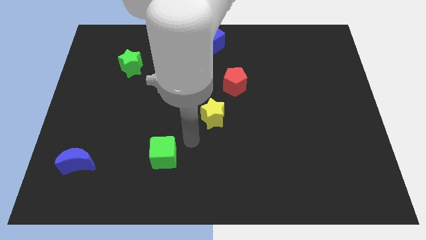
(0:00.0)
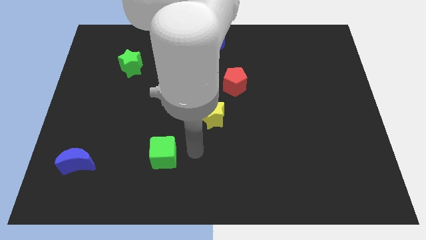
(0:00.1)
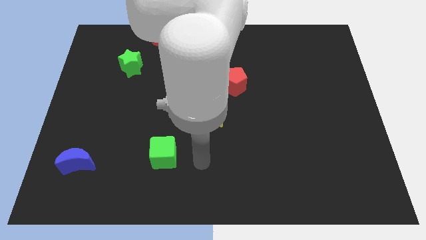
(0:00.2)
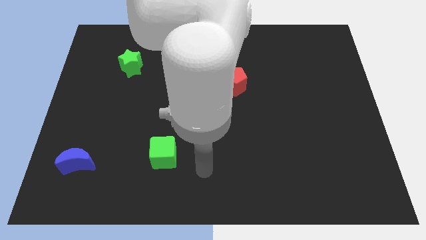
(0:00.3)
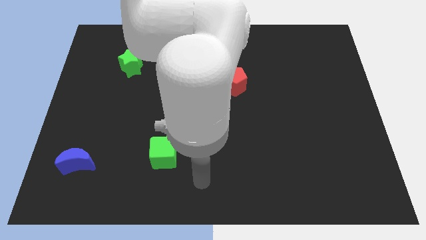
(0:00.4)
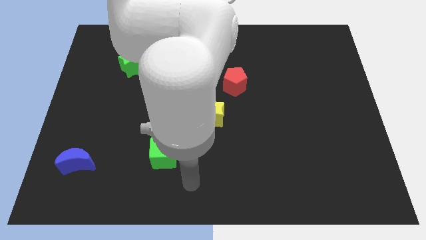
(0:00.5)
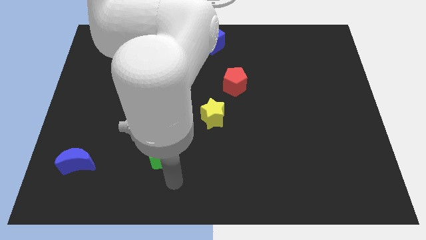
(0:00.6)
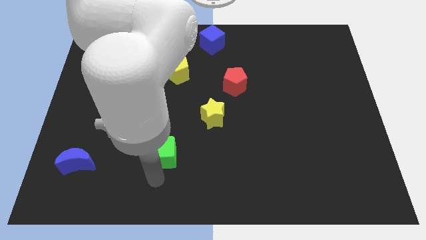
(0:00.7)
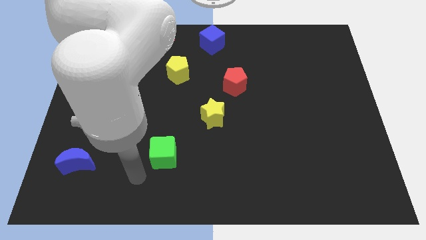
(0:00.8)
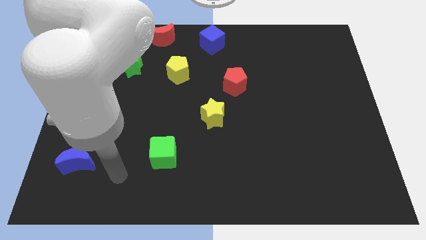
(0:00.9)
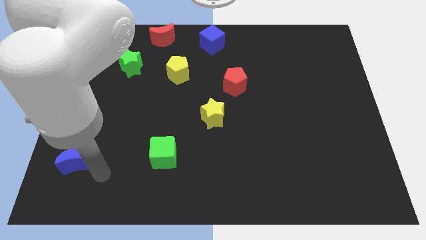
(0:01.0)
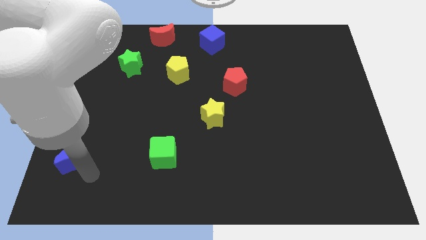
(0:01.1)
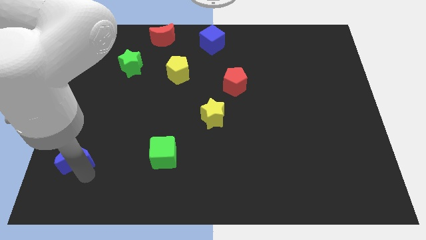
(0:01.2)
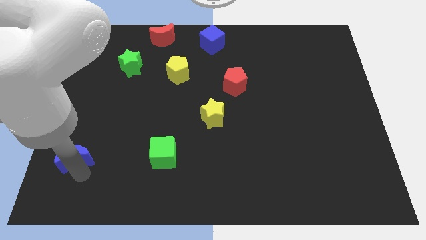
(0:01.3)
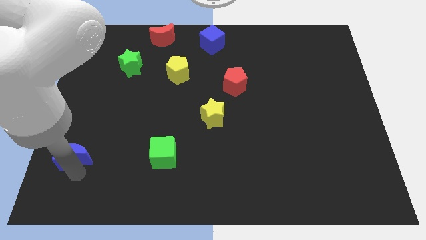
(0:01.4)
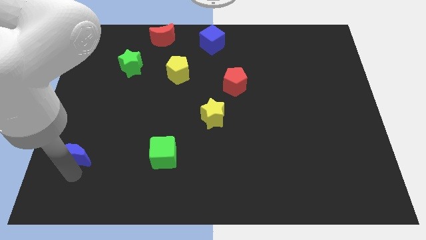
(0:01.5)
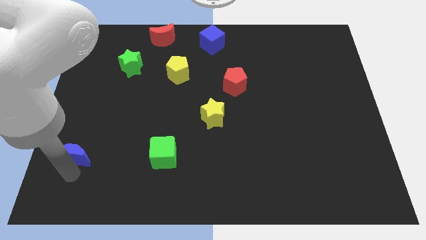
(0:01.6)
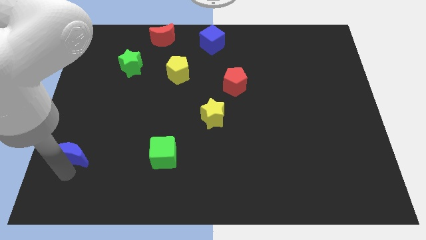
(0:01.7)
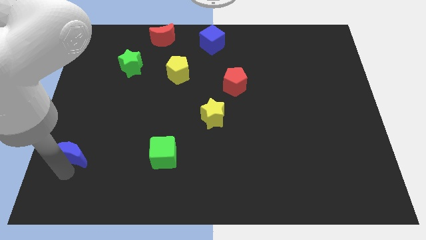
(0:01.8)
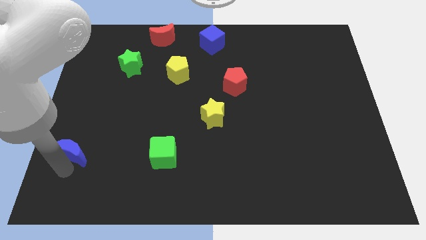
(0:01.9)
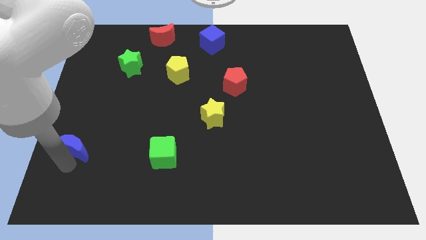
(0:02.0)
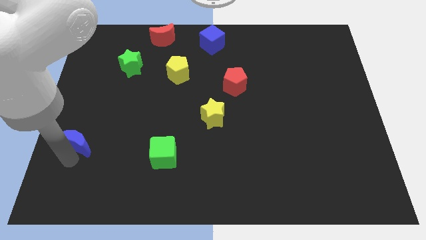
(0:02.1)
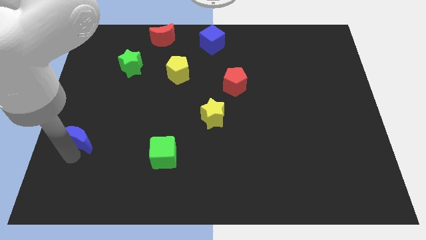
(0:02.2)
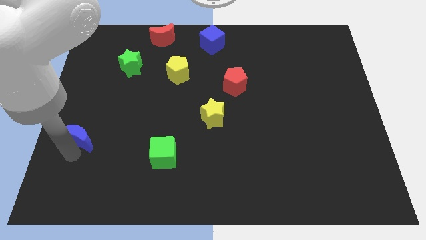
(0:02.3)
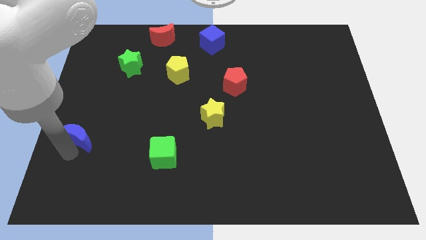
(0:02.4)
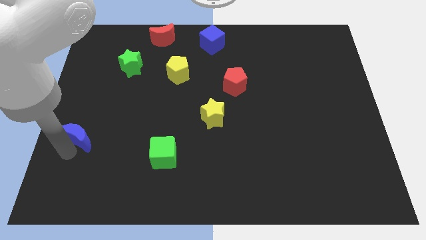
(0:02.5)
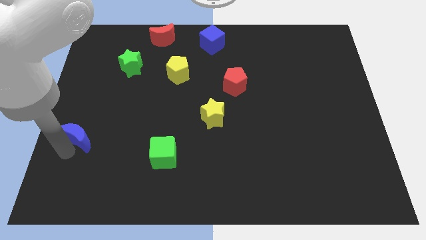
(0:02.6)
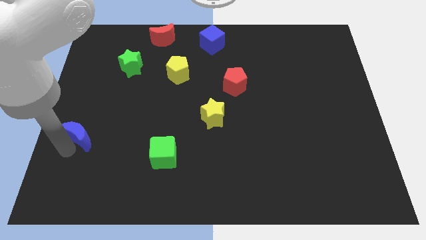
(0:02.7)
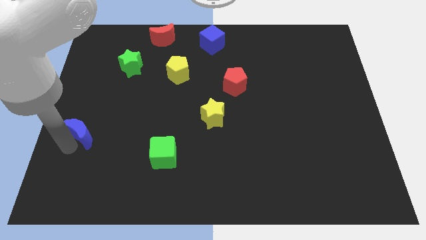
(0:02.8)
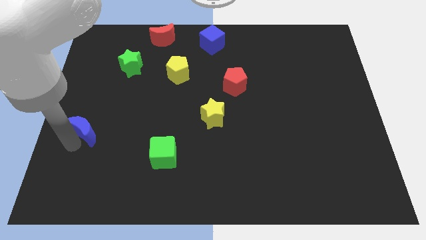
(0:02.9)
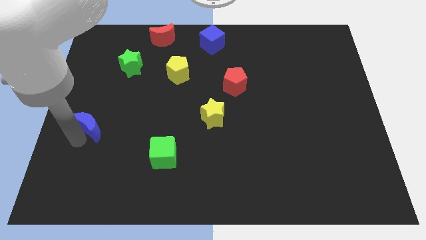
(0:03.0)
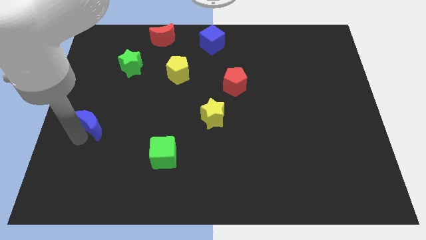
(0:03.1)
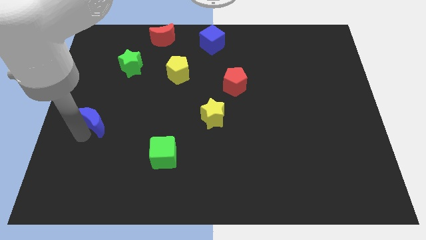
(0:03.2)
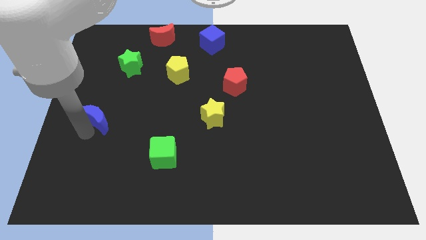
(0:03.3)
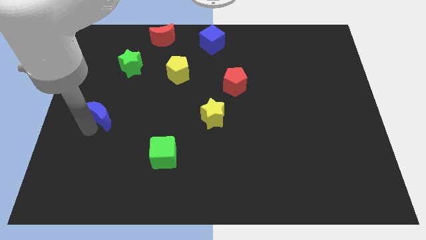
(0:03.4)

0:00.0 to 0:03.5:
push the blue crescent to the left center of the board

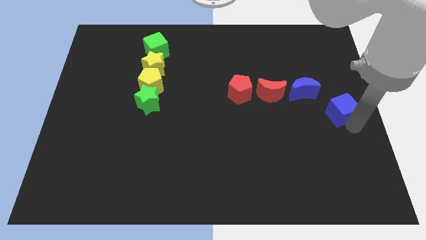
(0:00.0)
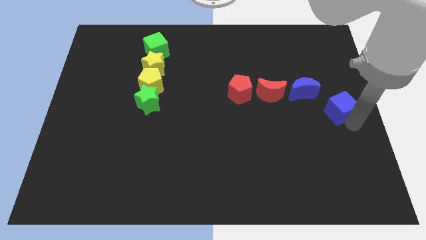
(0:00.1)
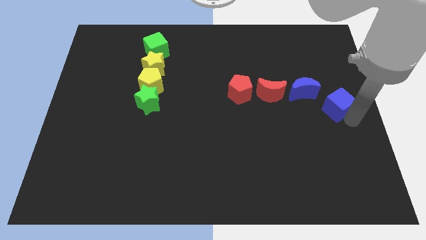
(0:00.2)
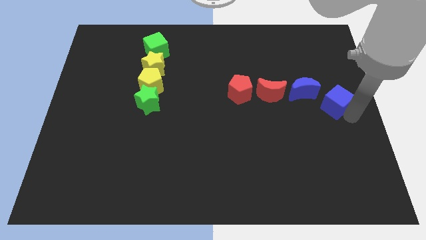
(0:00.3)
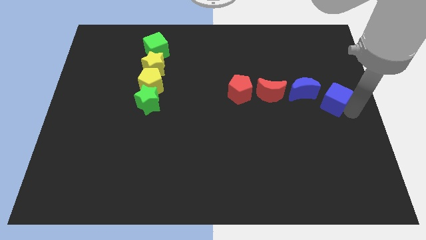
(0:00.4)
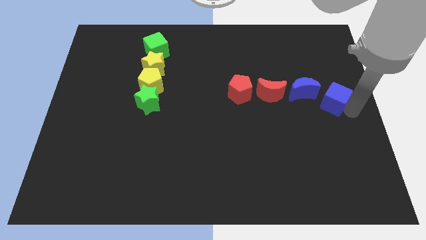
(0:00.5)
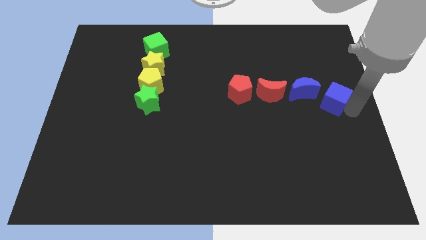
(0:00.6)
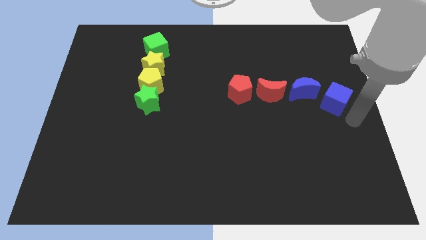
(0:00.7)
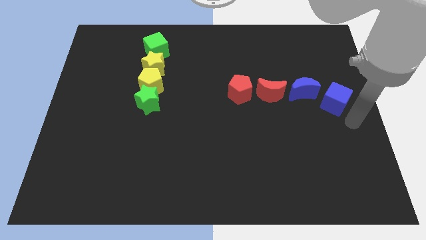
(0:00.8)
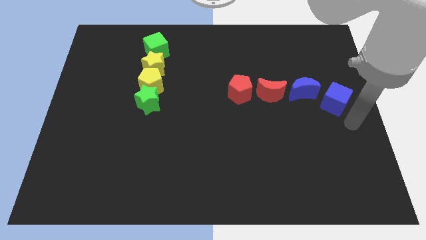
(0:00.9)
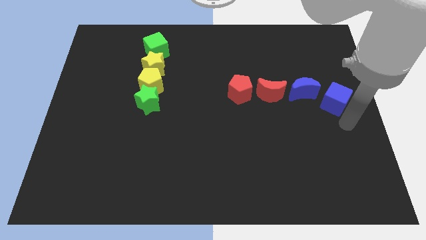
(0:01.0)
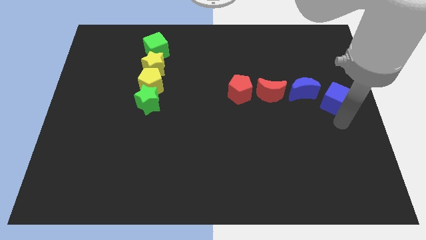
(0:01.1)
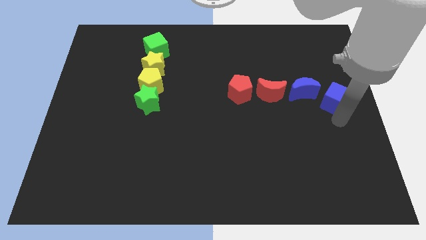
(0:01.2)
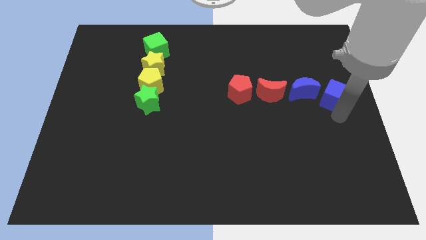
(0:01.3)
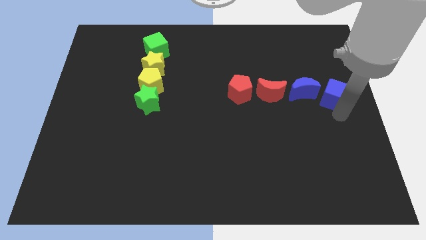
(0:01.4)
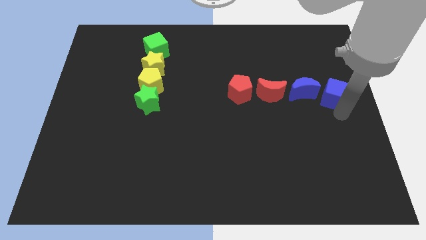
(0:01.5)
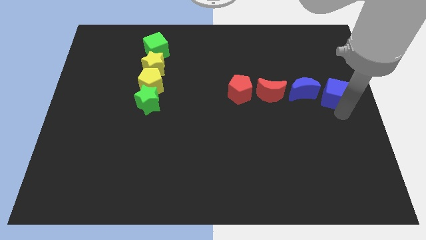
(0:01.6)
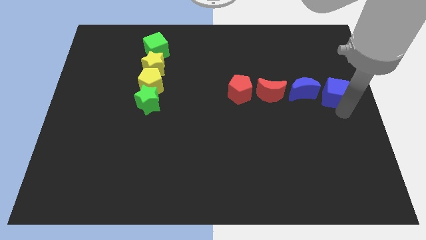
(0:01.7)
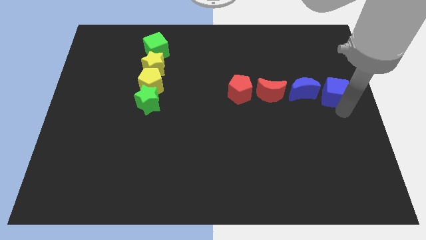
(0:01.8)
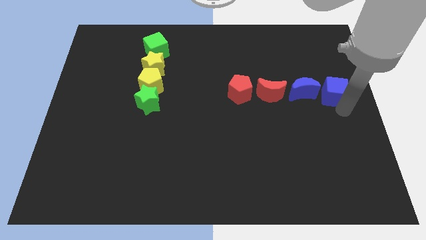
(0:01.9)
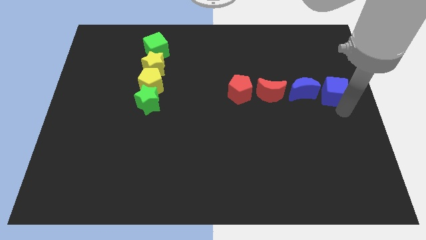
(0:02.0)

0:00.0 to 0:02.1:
put the blue cube on the right side of the blue crescent

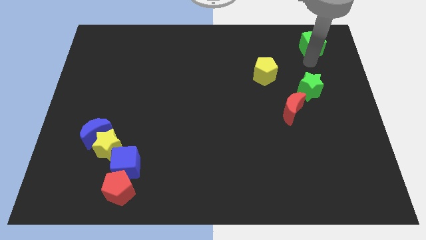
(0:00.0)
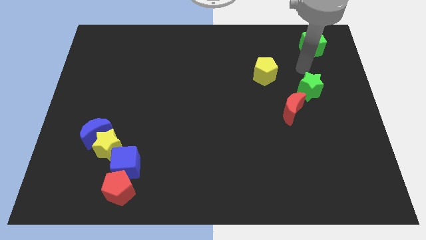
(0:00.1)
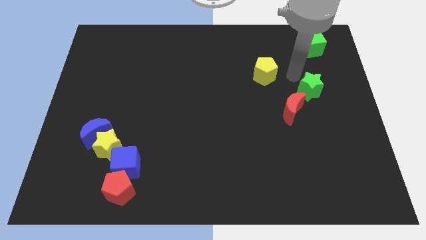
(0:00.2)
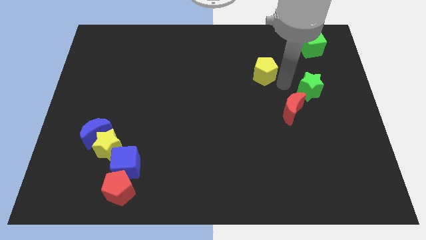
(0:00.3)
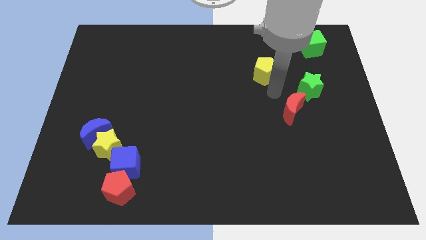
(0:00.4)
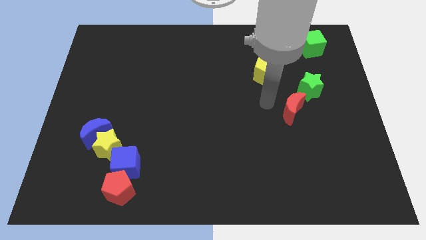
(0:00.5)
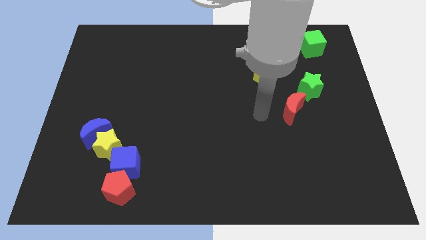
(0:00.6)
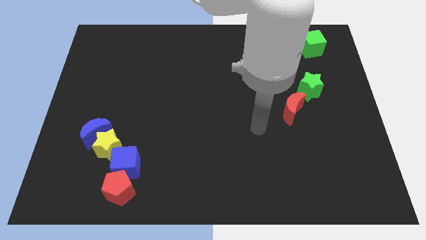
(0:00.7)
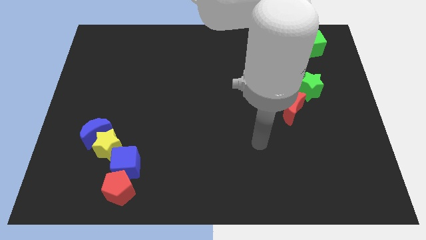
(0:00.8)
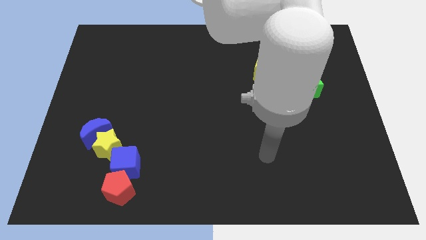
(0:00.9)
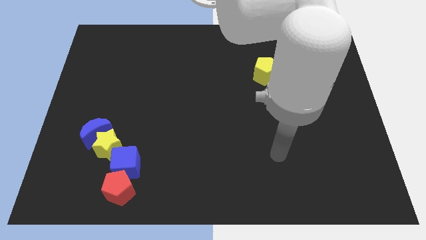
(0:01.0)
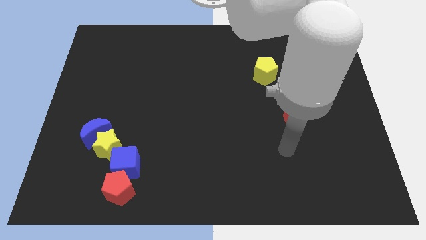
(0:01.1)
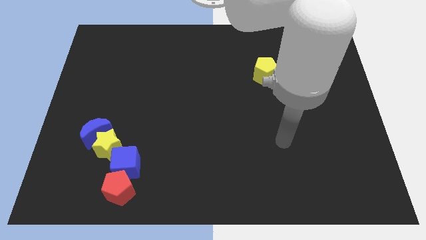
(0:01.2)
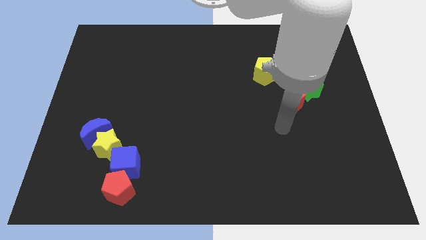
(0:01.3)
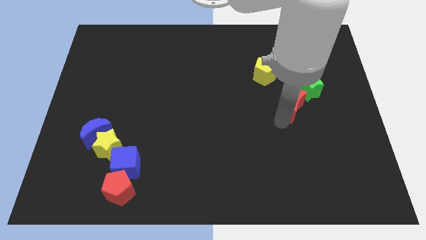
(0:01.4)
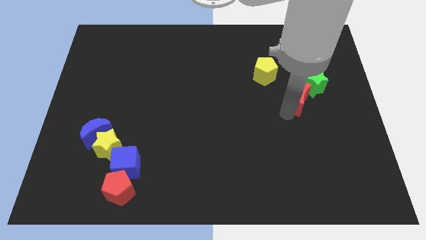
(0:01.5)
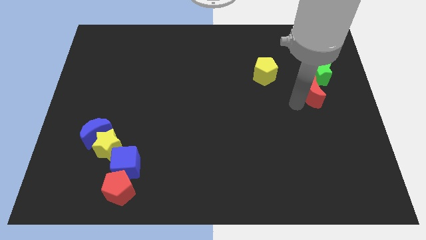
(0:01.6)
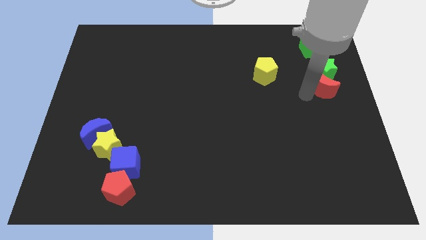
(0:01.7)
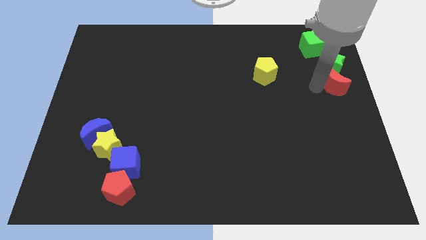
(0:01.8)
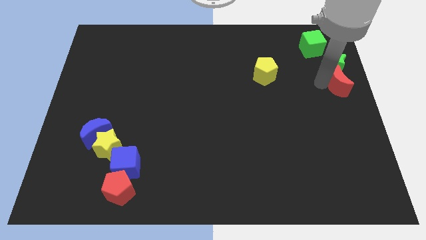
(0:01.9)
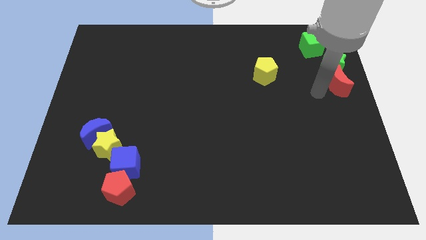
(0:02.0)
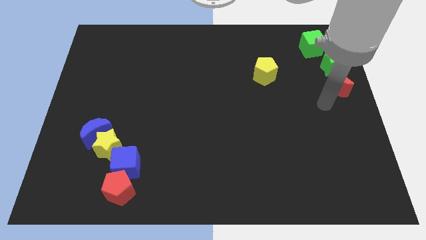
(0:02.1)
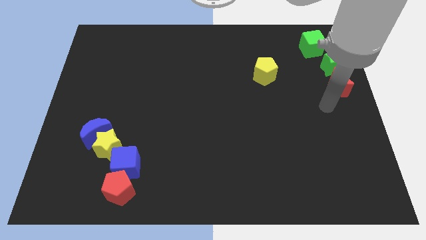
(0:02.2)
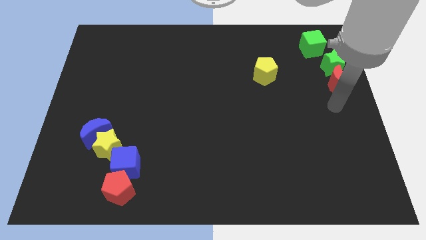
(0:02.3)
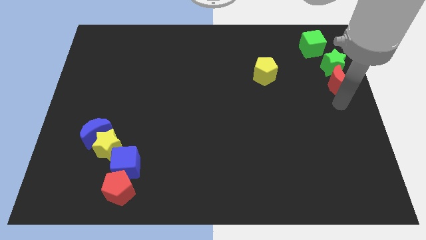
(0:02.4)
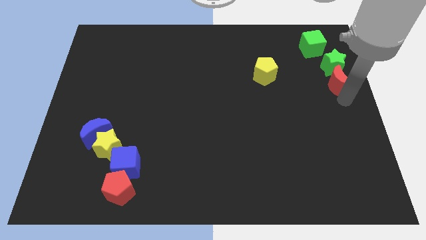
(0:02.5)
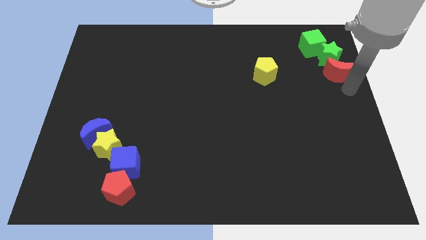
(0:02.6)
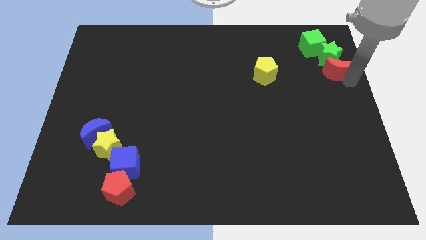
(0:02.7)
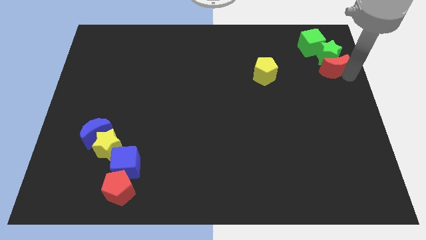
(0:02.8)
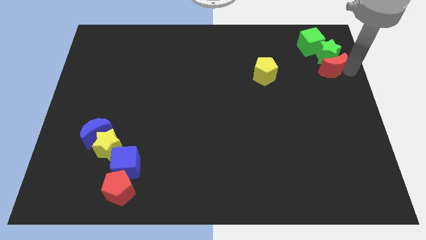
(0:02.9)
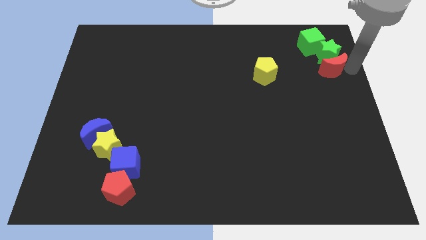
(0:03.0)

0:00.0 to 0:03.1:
push the red crescent along with the green star into the green cube

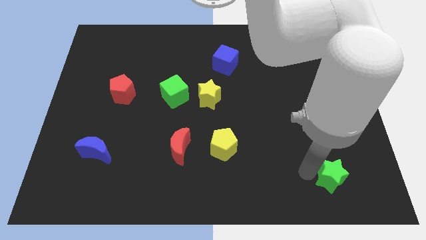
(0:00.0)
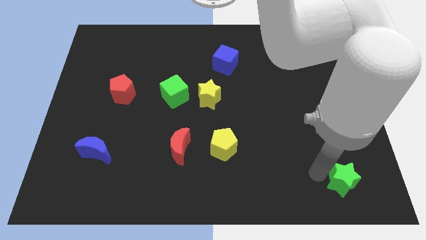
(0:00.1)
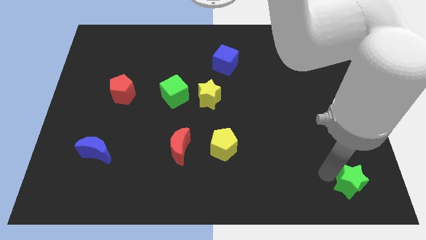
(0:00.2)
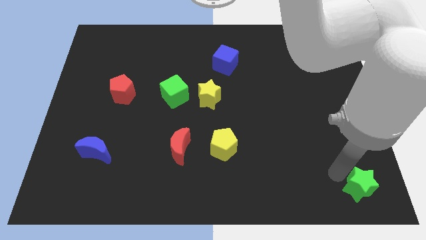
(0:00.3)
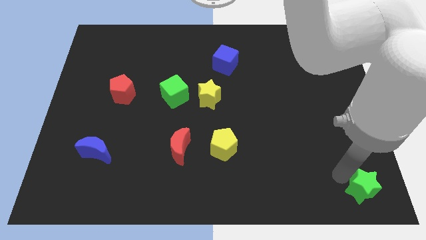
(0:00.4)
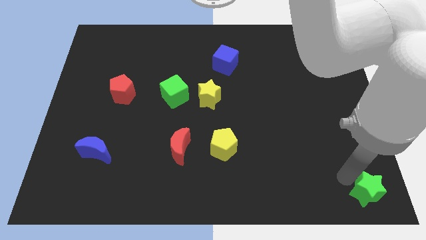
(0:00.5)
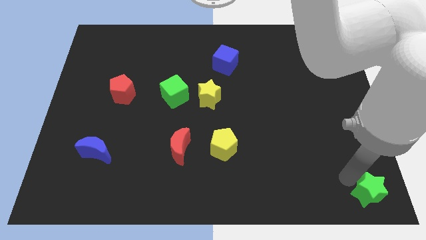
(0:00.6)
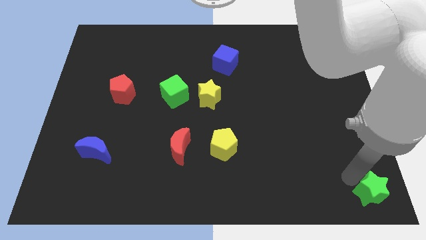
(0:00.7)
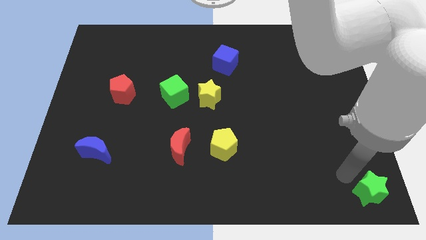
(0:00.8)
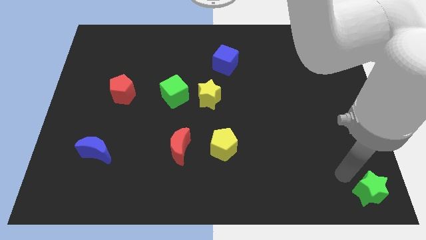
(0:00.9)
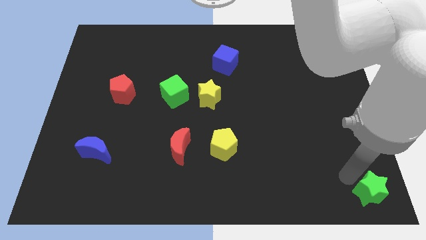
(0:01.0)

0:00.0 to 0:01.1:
push the green star to the bottom right
